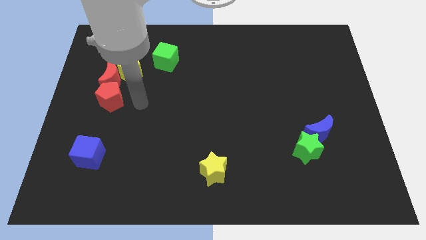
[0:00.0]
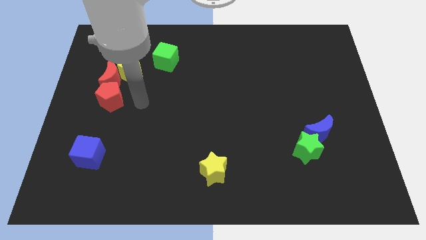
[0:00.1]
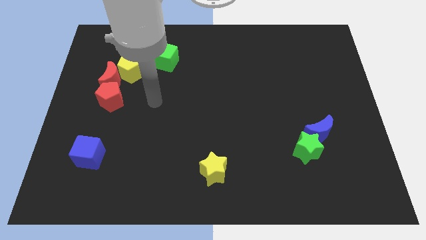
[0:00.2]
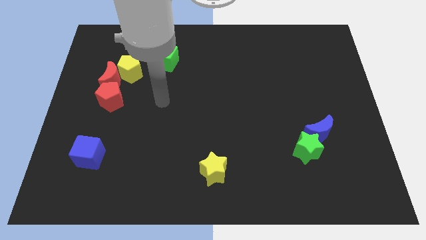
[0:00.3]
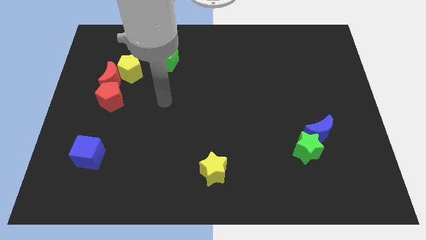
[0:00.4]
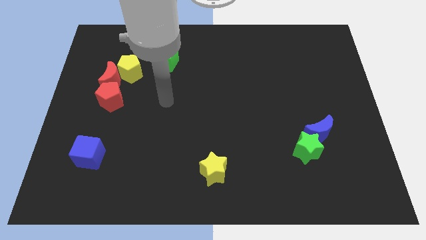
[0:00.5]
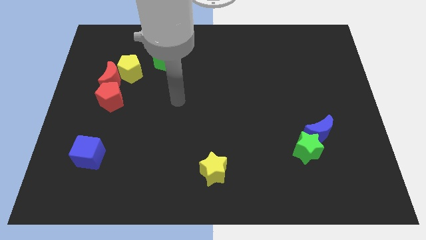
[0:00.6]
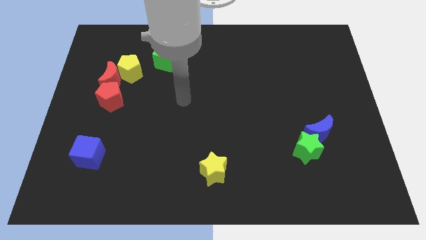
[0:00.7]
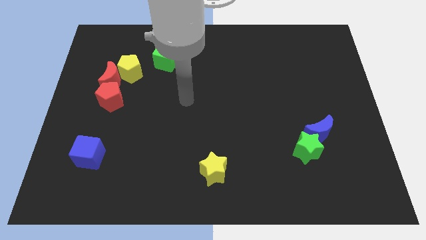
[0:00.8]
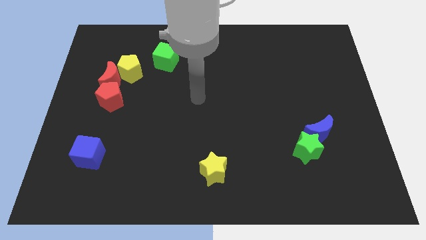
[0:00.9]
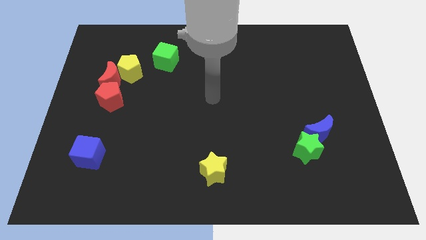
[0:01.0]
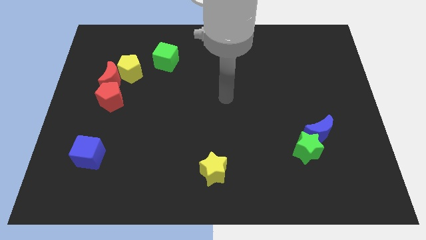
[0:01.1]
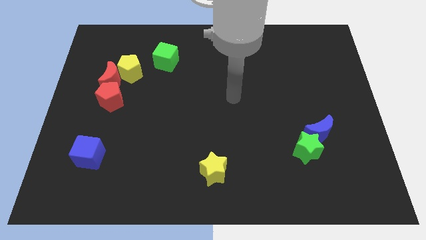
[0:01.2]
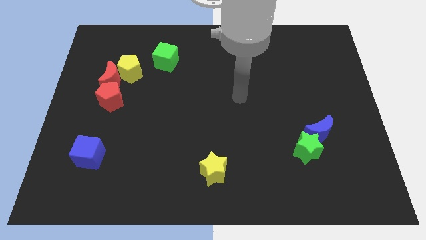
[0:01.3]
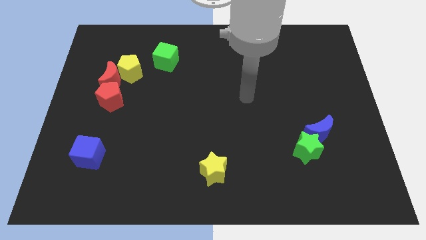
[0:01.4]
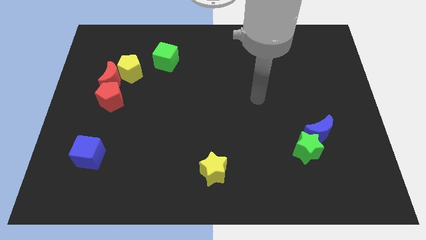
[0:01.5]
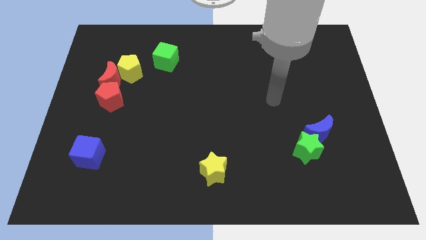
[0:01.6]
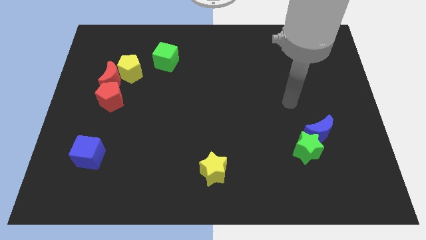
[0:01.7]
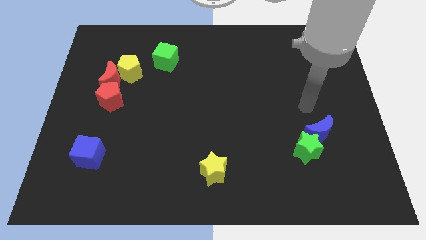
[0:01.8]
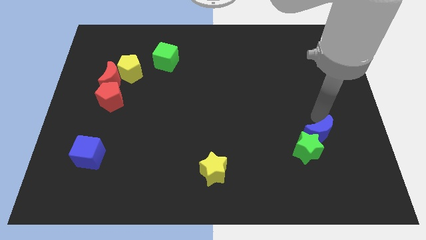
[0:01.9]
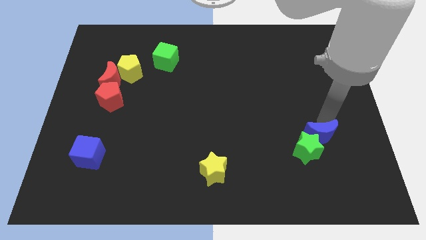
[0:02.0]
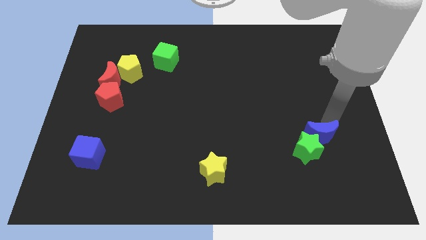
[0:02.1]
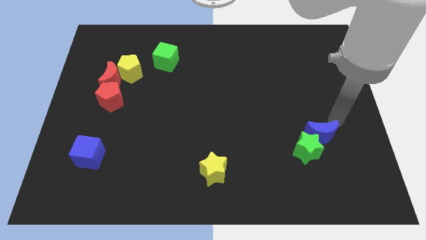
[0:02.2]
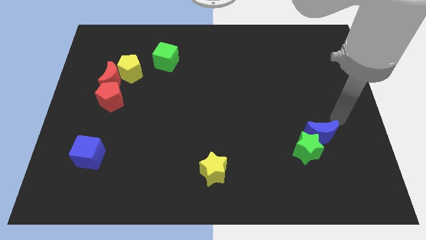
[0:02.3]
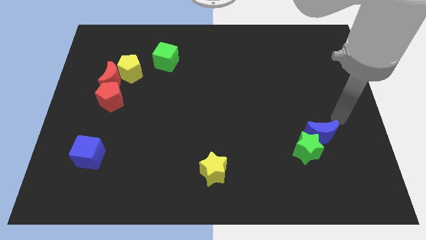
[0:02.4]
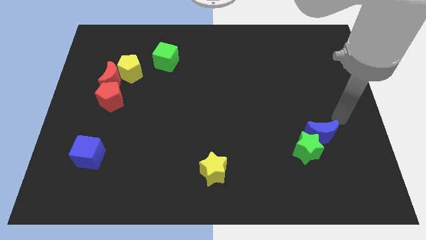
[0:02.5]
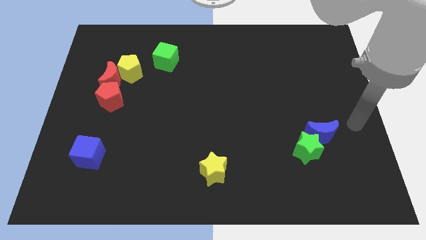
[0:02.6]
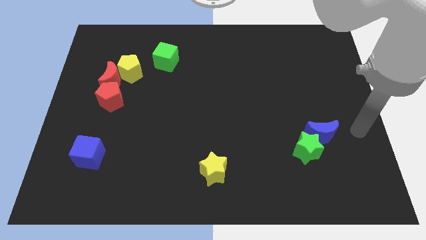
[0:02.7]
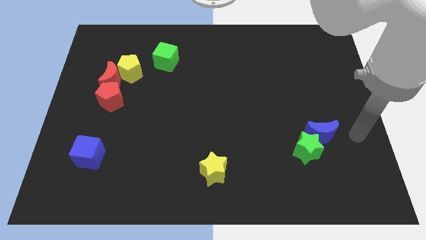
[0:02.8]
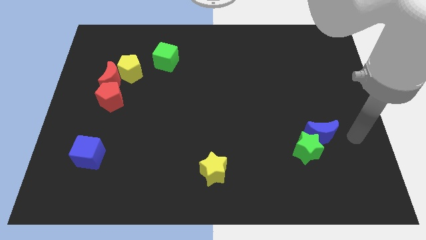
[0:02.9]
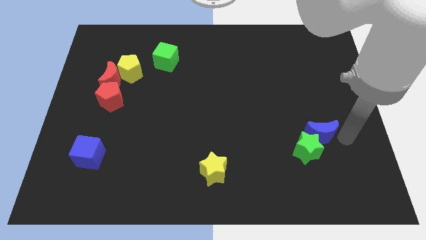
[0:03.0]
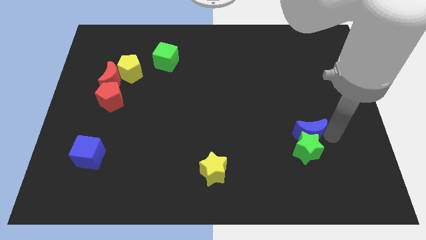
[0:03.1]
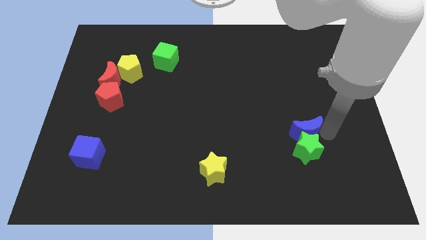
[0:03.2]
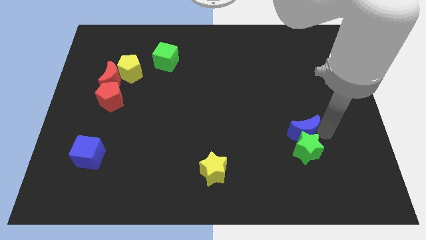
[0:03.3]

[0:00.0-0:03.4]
move the blue crescent to the top of the green star

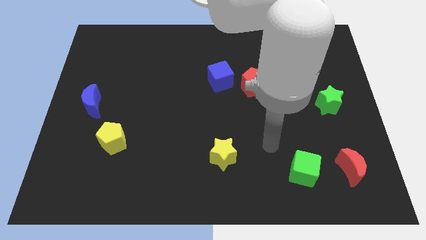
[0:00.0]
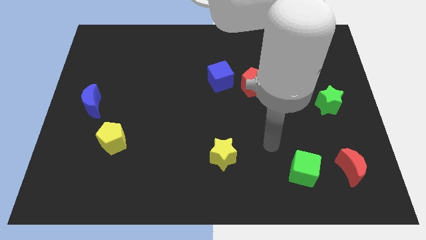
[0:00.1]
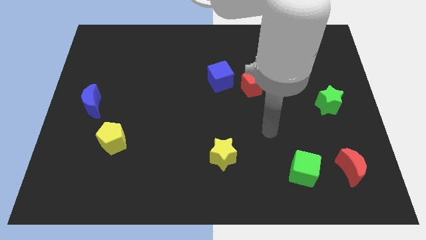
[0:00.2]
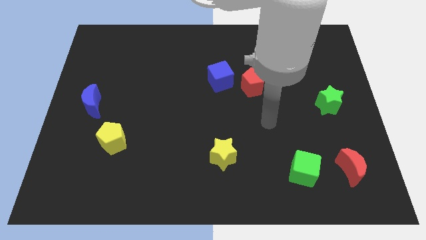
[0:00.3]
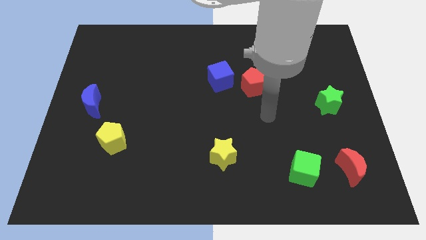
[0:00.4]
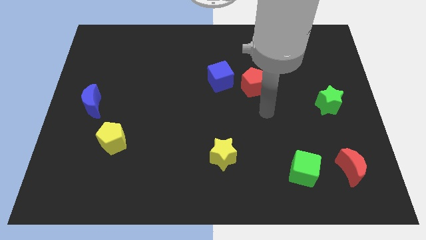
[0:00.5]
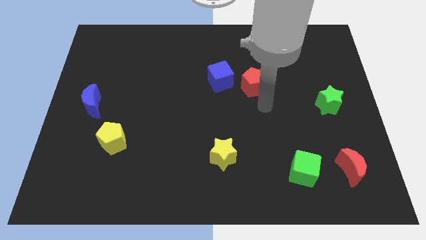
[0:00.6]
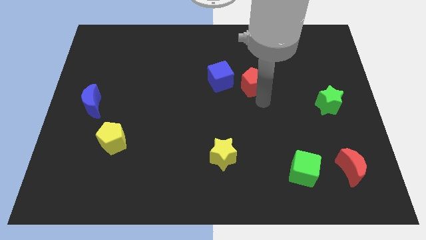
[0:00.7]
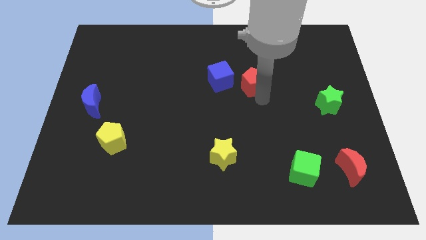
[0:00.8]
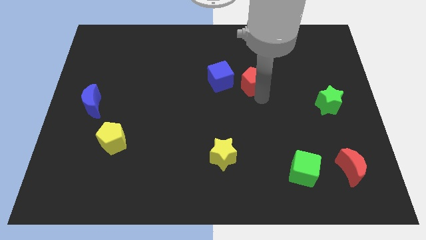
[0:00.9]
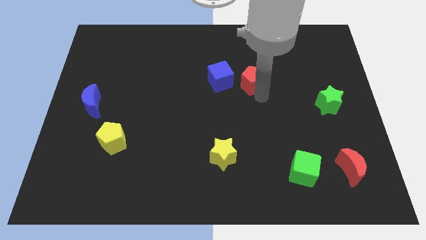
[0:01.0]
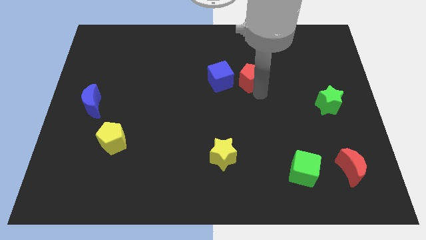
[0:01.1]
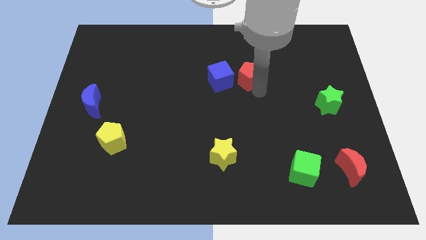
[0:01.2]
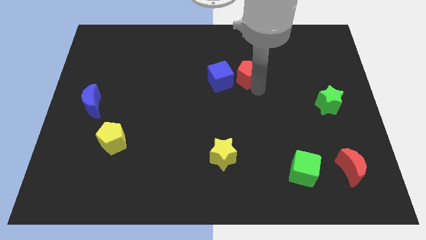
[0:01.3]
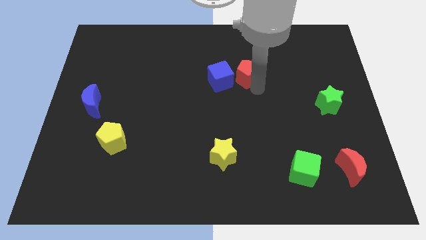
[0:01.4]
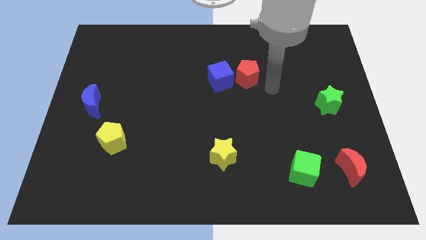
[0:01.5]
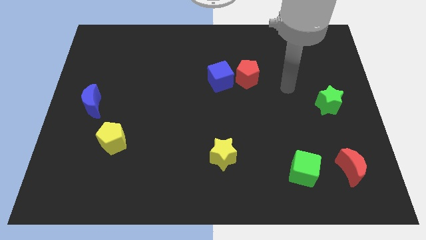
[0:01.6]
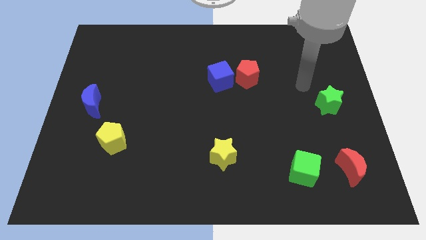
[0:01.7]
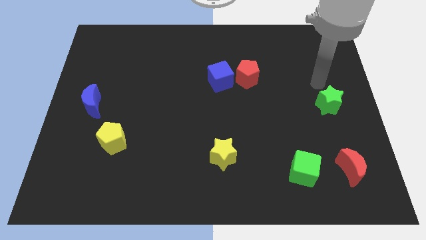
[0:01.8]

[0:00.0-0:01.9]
move the red pentagon slightly to the right of blue cube

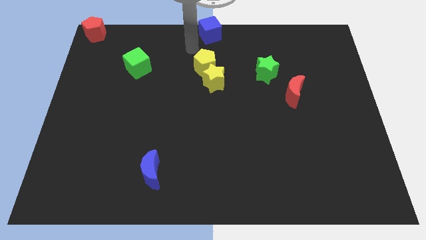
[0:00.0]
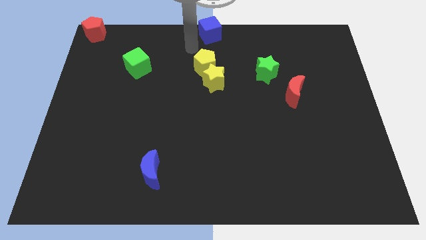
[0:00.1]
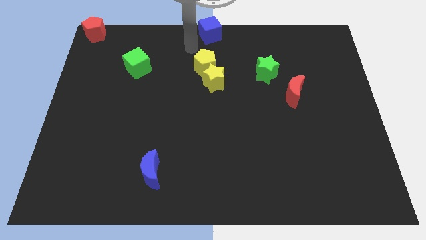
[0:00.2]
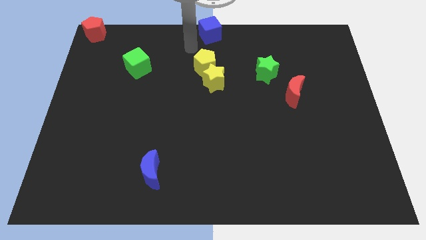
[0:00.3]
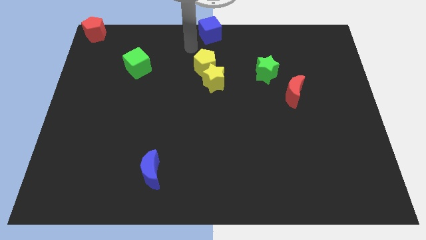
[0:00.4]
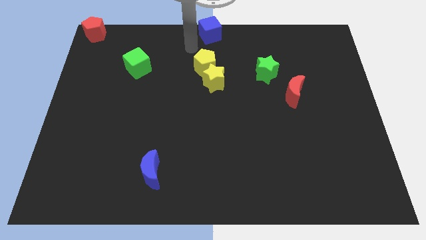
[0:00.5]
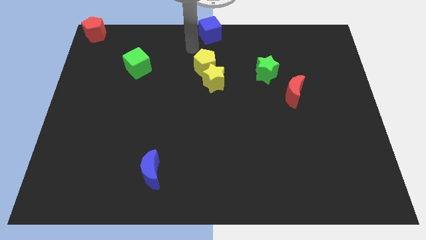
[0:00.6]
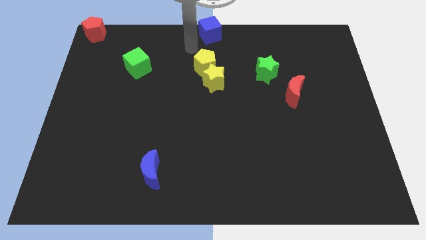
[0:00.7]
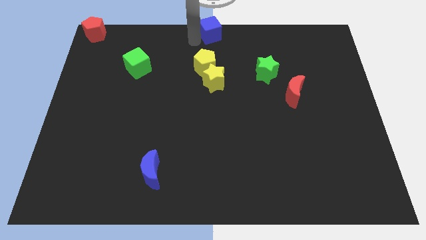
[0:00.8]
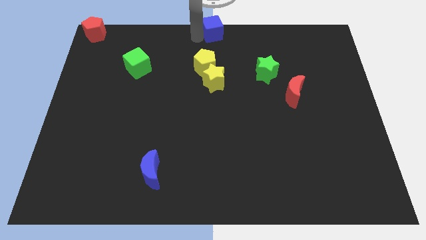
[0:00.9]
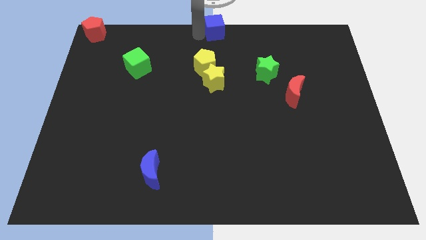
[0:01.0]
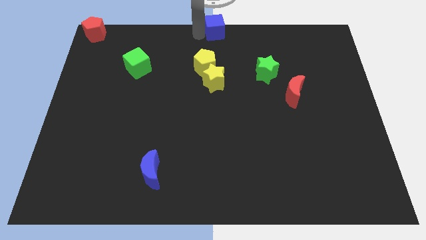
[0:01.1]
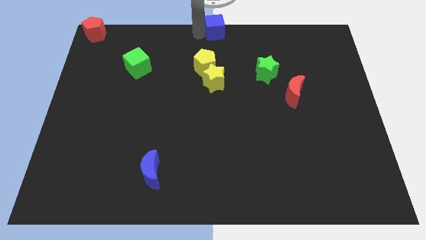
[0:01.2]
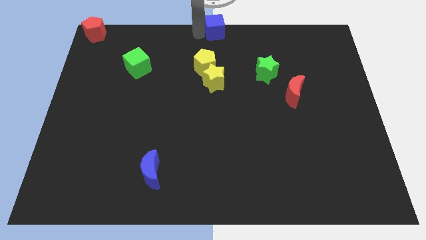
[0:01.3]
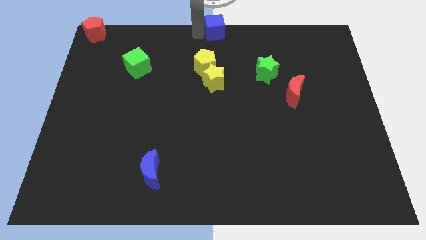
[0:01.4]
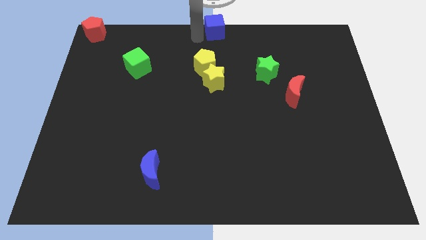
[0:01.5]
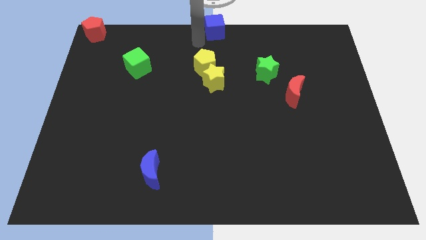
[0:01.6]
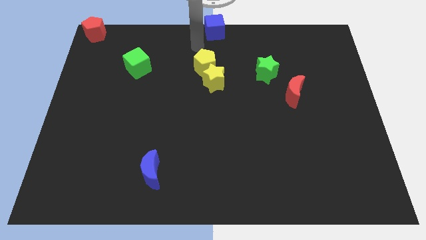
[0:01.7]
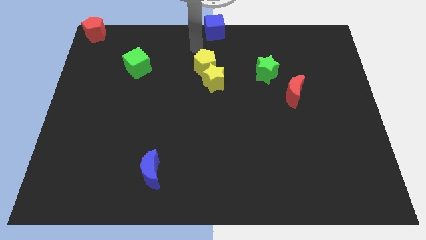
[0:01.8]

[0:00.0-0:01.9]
slide the blue crescent to the top center of the board

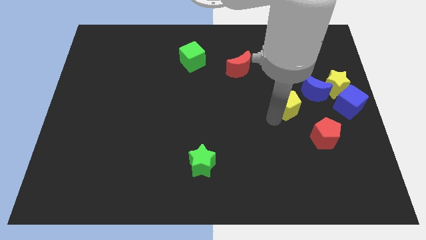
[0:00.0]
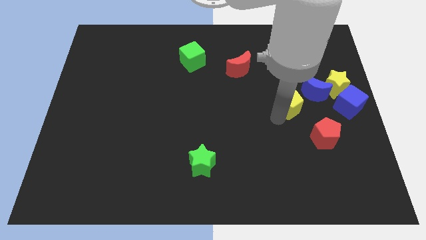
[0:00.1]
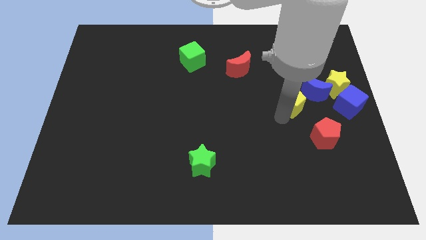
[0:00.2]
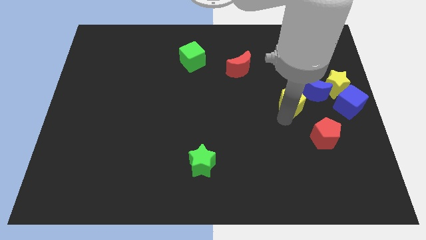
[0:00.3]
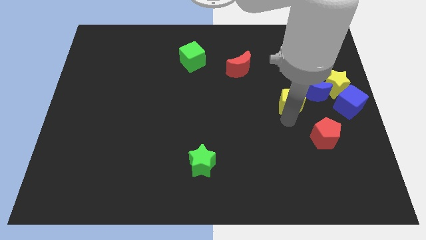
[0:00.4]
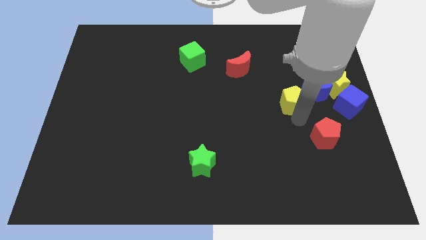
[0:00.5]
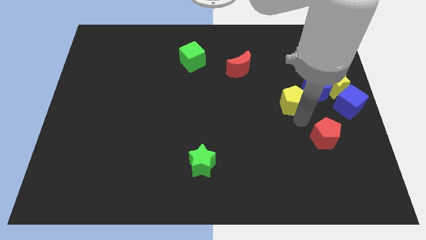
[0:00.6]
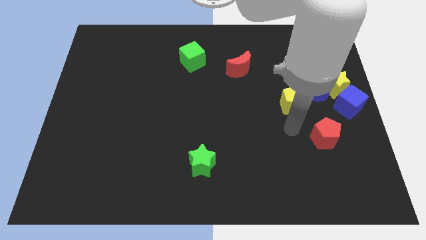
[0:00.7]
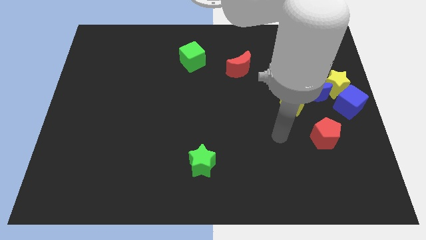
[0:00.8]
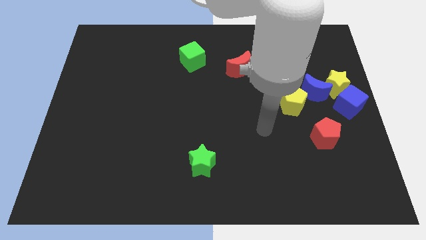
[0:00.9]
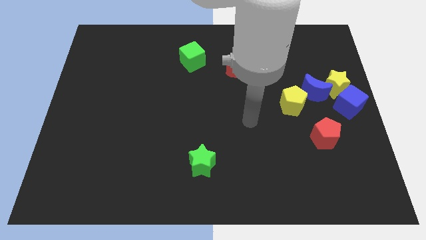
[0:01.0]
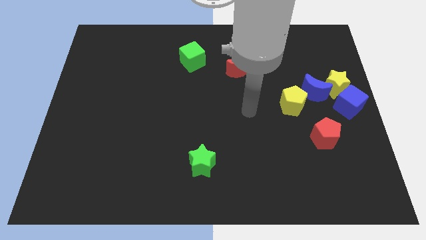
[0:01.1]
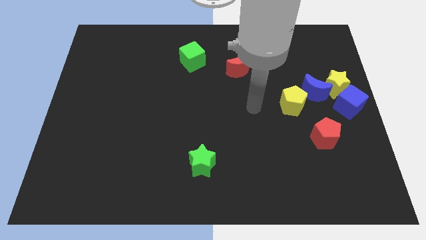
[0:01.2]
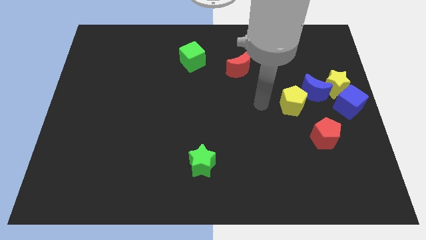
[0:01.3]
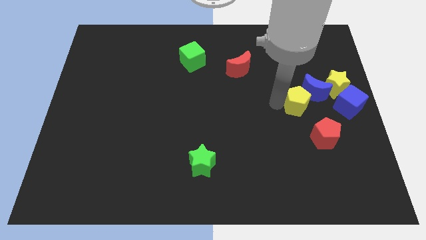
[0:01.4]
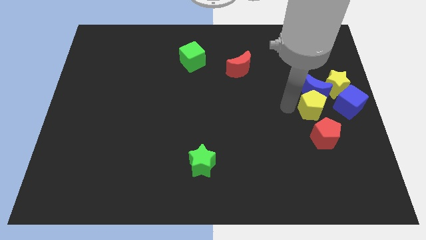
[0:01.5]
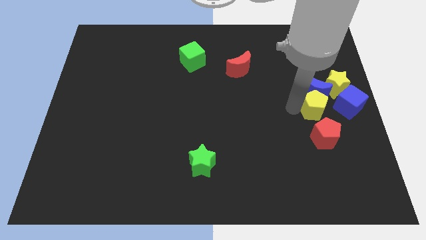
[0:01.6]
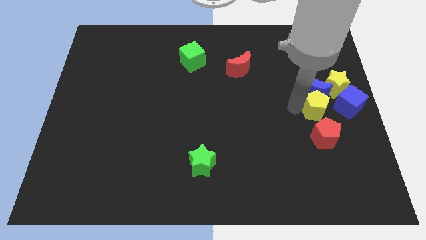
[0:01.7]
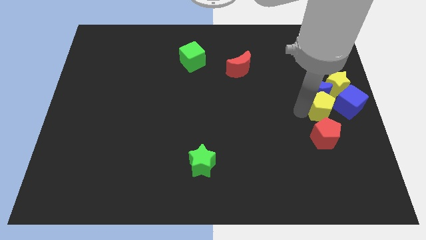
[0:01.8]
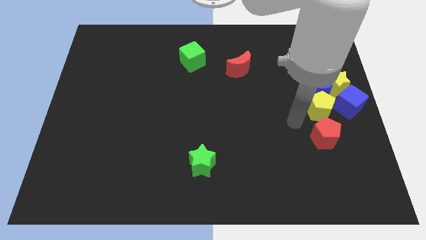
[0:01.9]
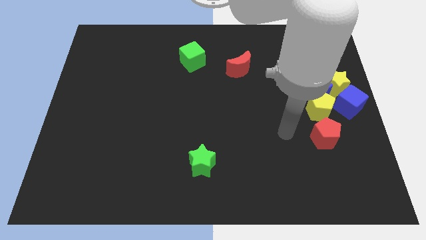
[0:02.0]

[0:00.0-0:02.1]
move the yellow pentagon to the bottom of the blue crescent
